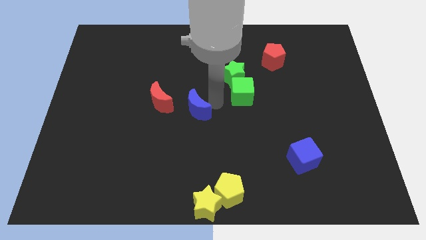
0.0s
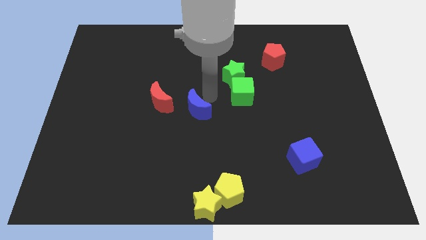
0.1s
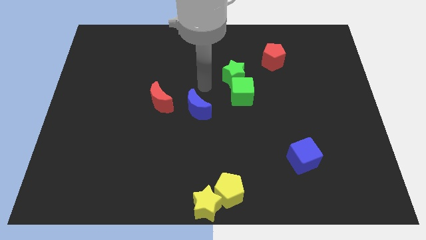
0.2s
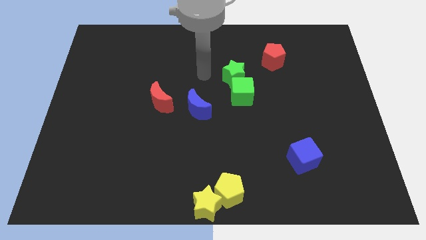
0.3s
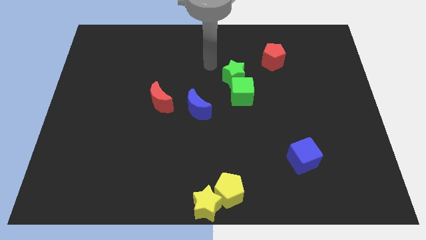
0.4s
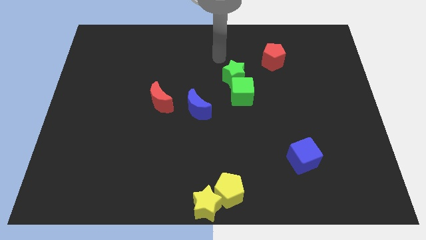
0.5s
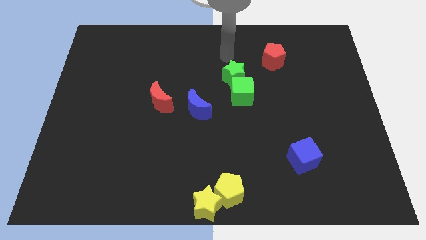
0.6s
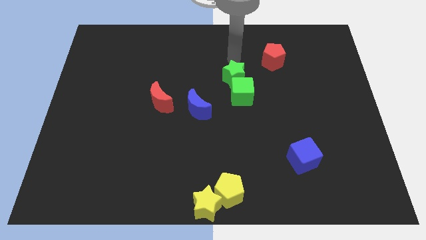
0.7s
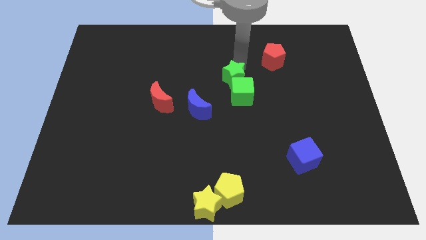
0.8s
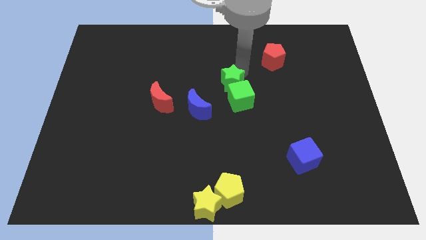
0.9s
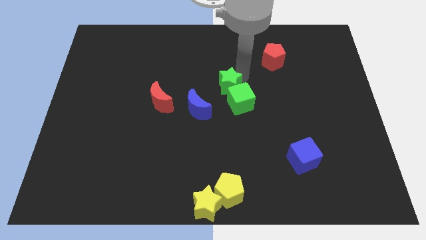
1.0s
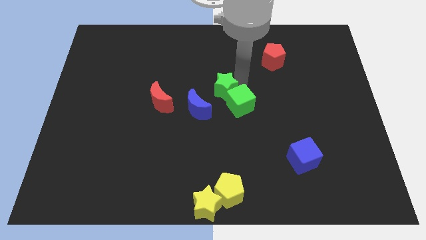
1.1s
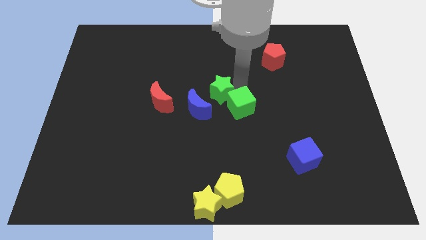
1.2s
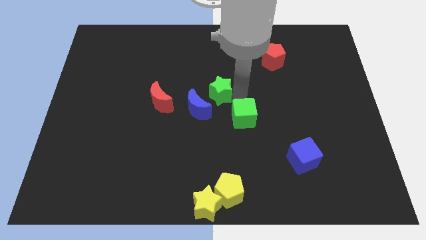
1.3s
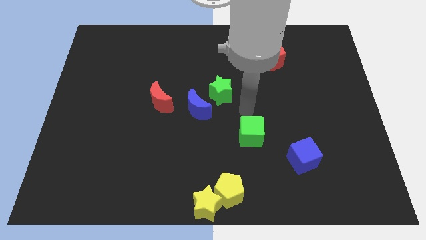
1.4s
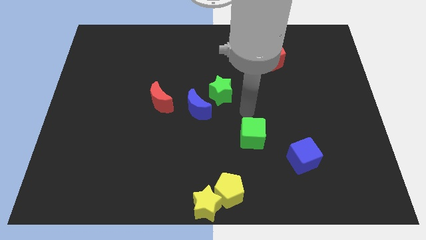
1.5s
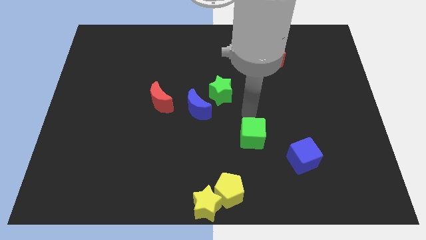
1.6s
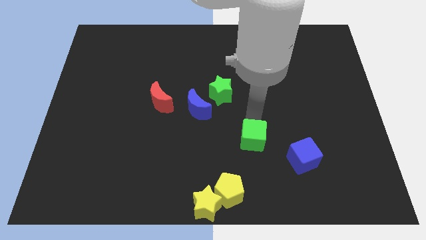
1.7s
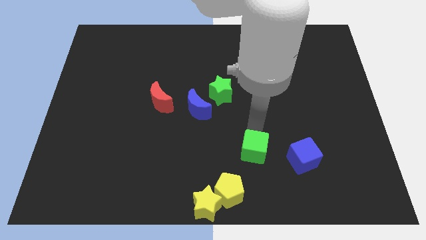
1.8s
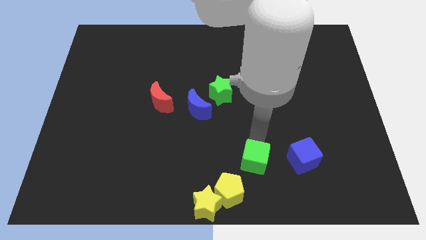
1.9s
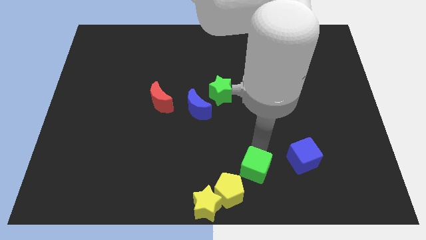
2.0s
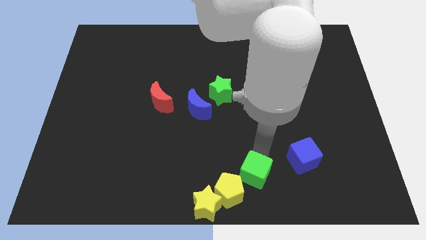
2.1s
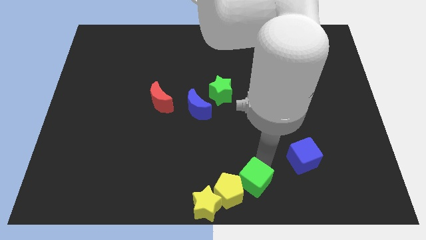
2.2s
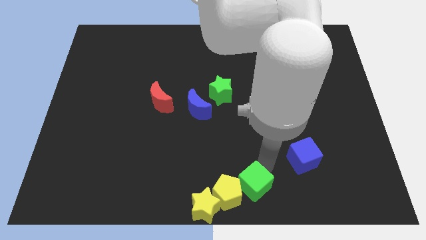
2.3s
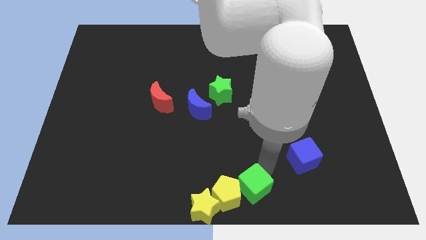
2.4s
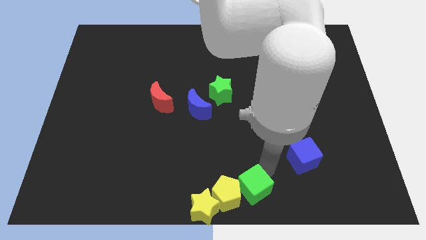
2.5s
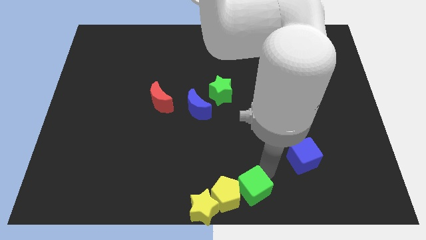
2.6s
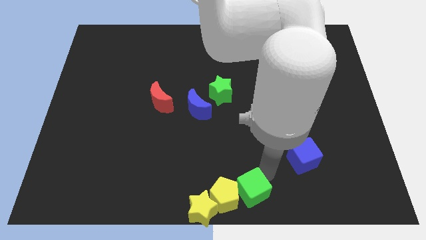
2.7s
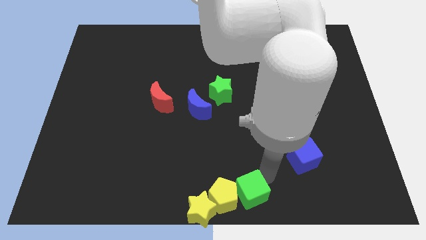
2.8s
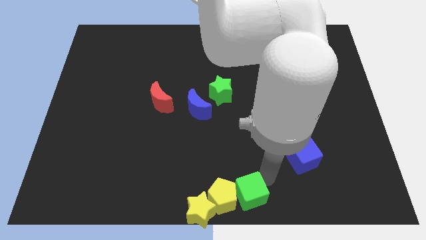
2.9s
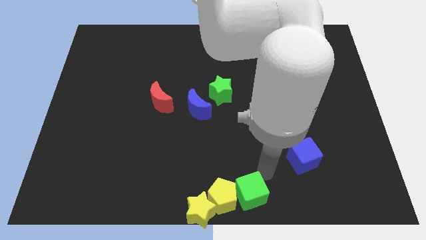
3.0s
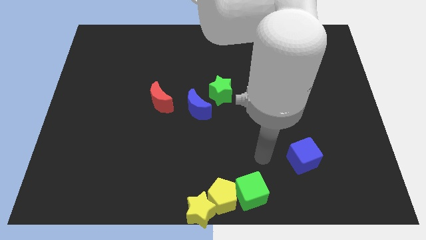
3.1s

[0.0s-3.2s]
place the green cube into the yellow pentagon

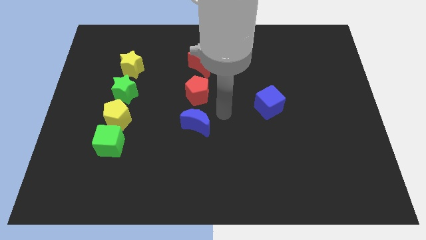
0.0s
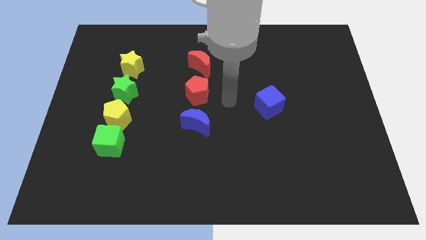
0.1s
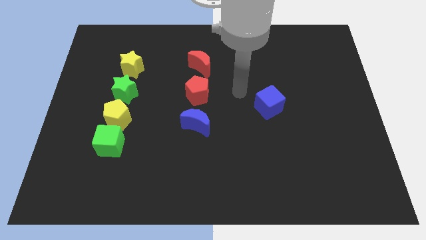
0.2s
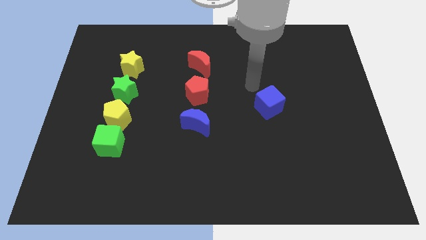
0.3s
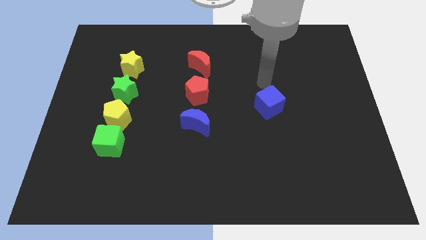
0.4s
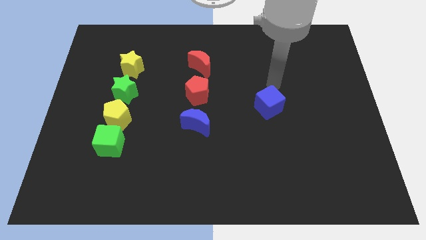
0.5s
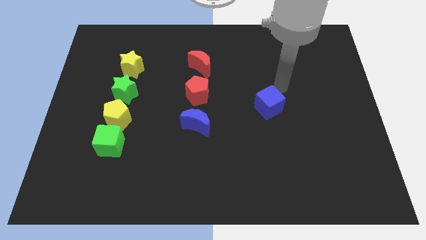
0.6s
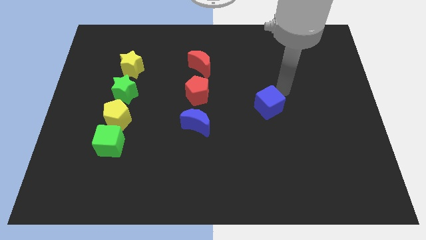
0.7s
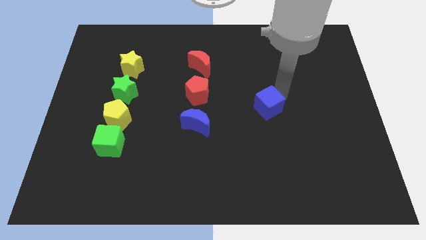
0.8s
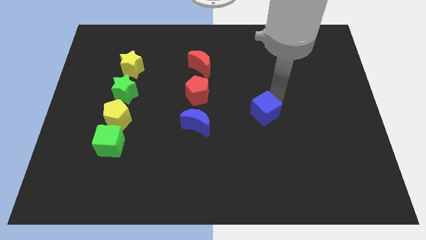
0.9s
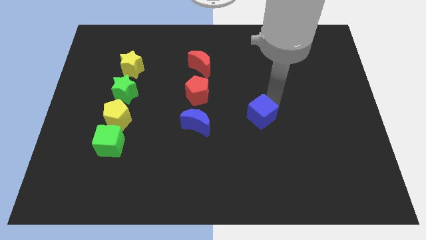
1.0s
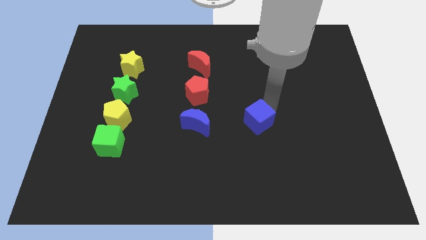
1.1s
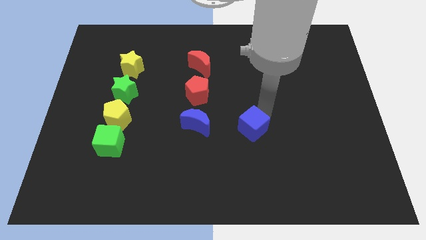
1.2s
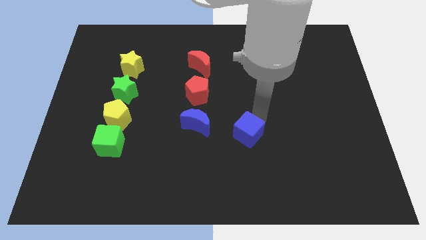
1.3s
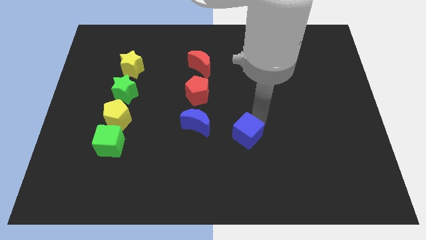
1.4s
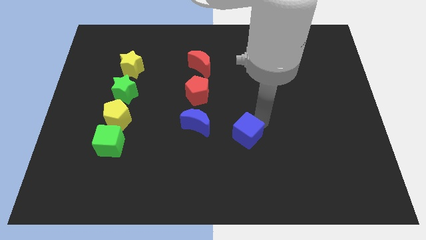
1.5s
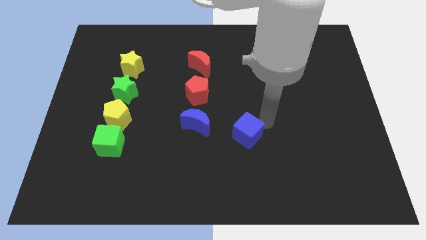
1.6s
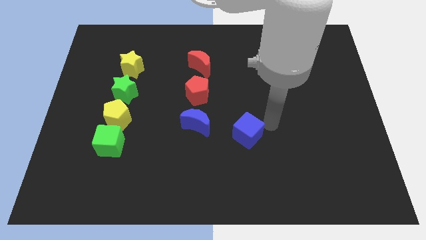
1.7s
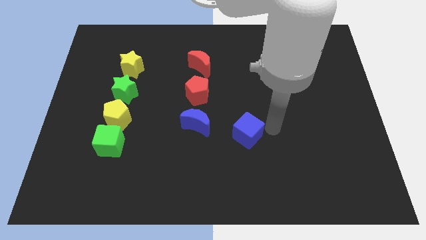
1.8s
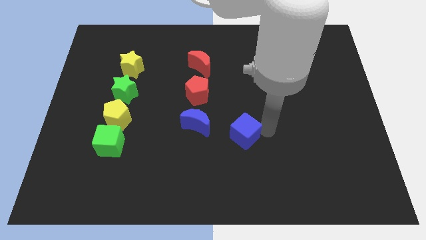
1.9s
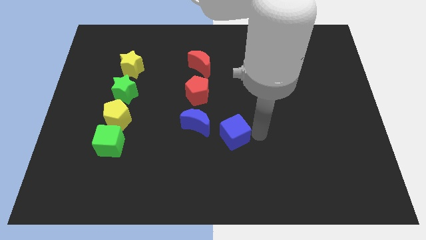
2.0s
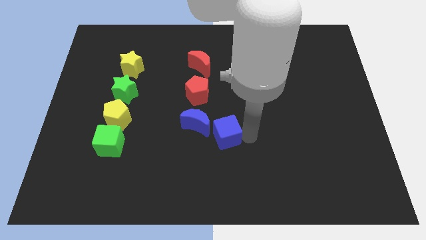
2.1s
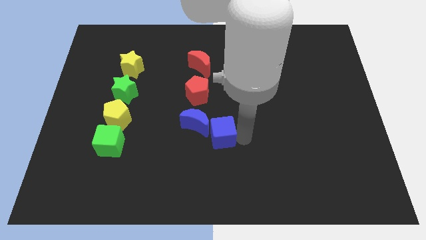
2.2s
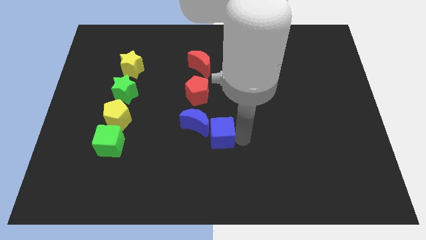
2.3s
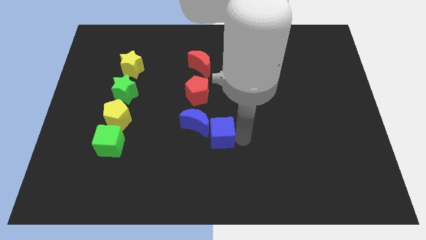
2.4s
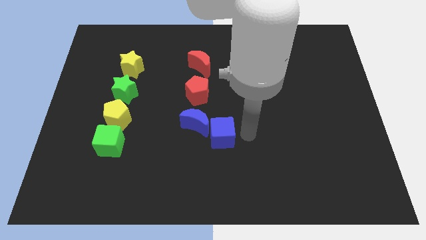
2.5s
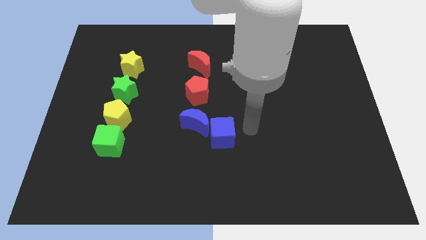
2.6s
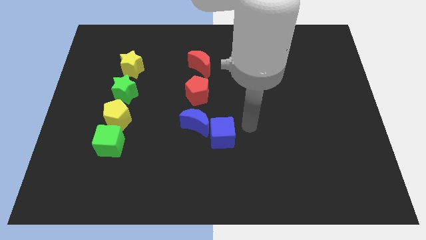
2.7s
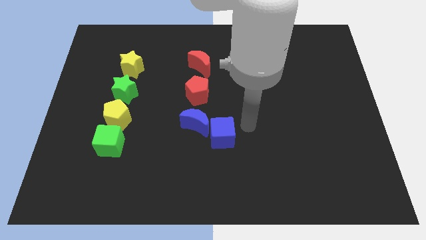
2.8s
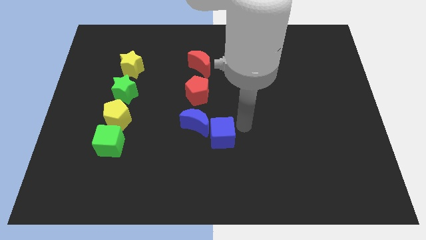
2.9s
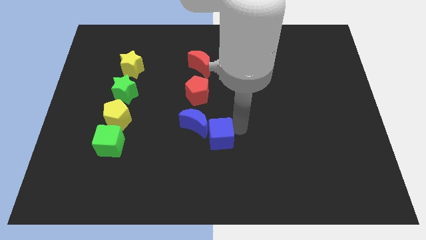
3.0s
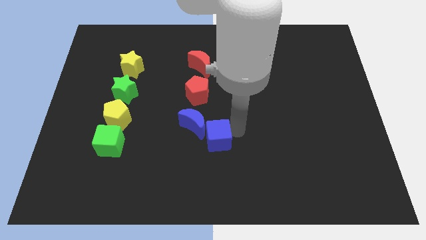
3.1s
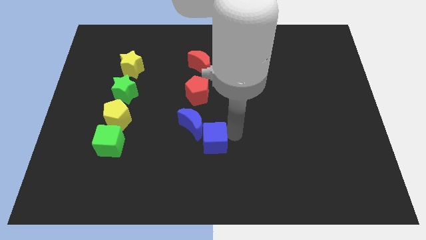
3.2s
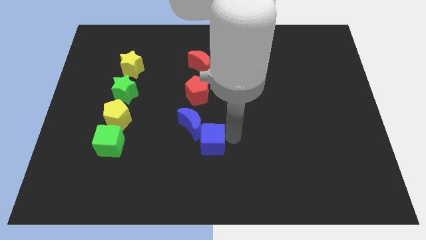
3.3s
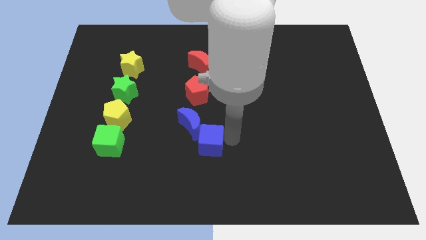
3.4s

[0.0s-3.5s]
move the blue cube into the blue moon

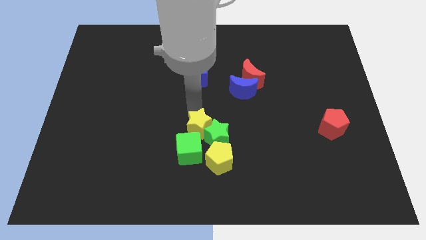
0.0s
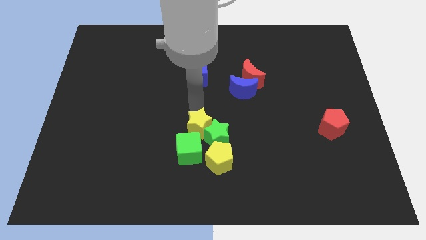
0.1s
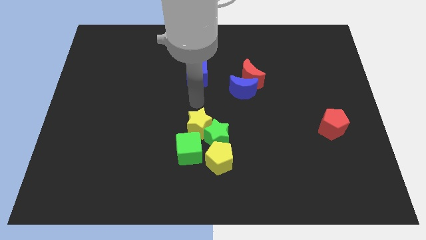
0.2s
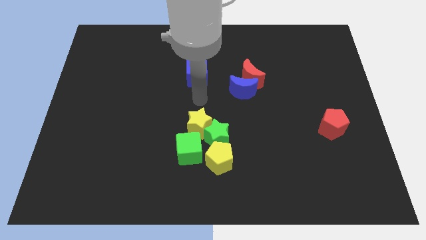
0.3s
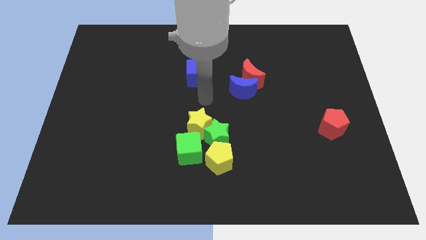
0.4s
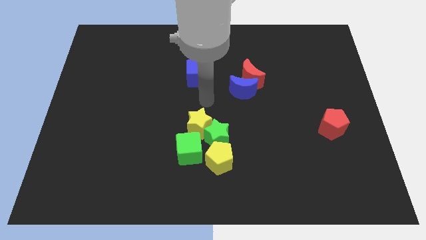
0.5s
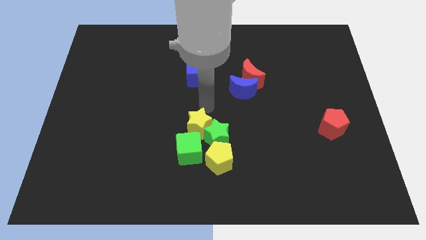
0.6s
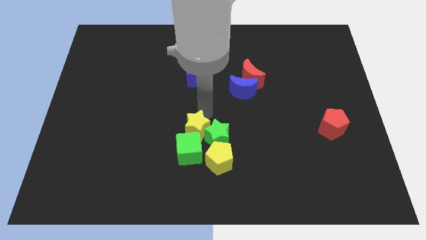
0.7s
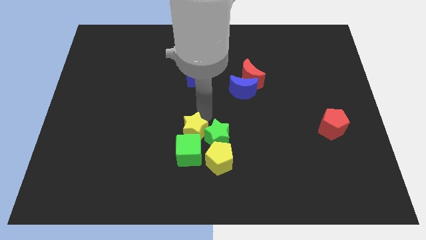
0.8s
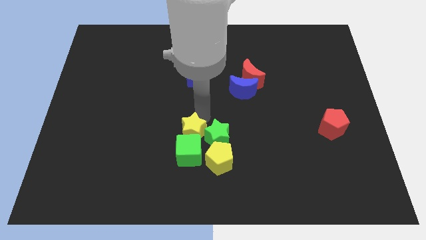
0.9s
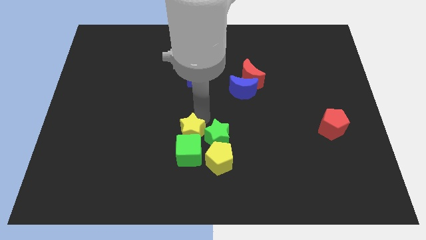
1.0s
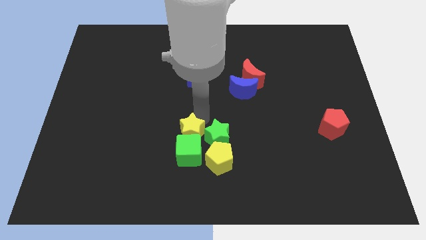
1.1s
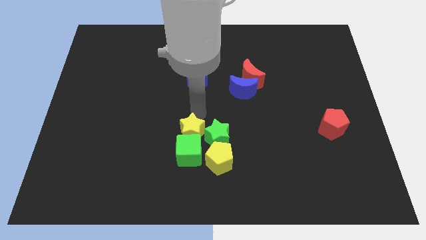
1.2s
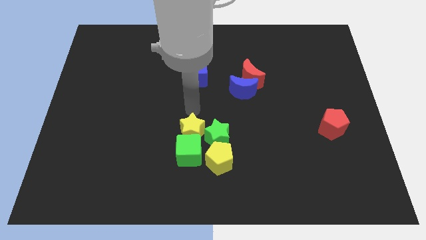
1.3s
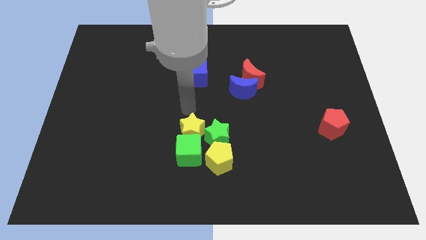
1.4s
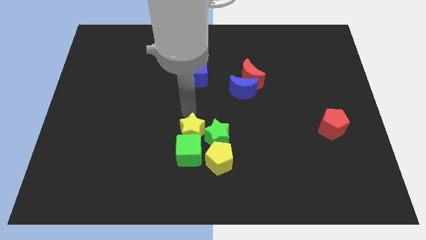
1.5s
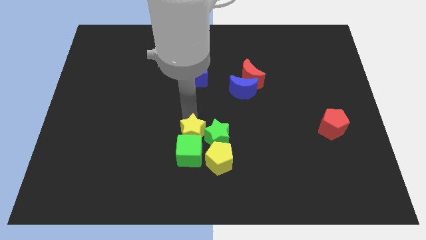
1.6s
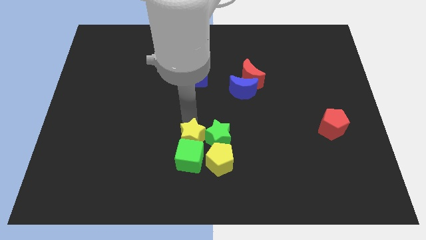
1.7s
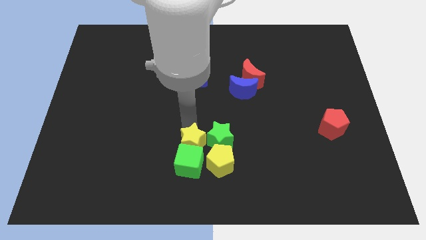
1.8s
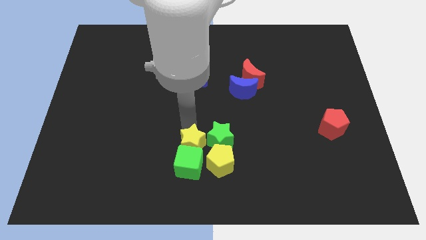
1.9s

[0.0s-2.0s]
adjust the yellow star into the green cube from the top

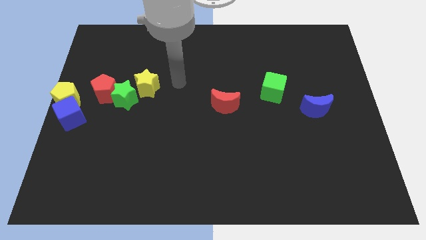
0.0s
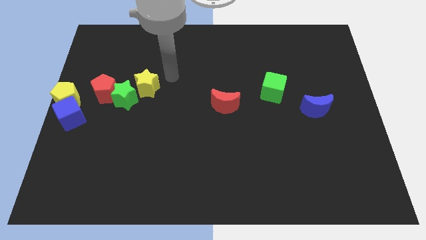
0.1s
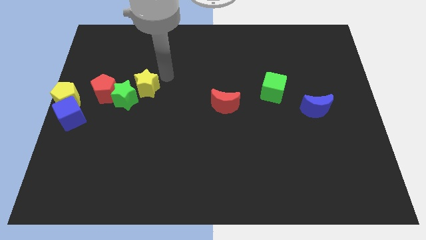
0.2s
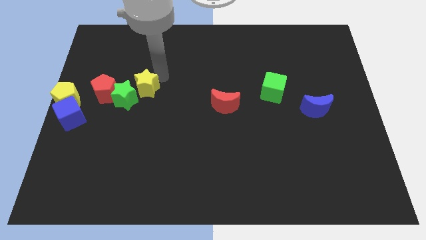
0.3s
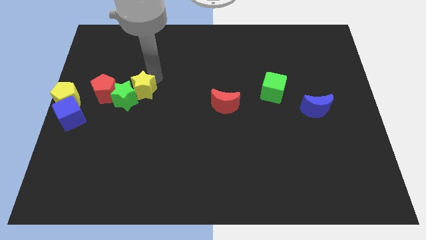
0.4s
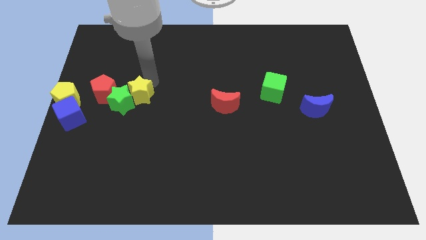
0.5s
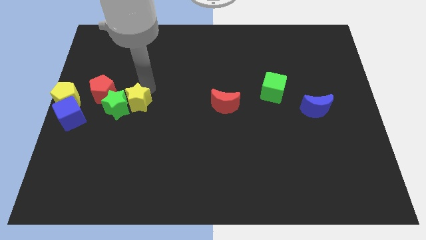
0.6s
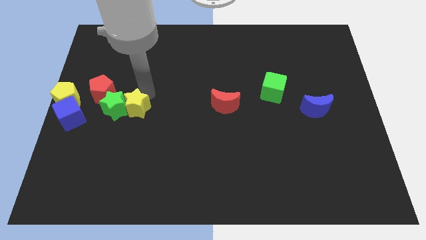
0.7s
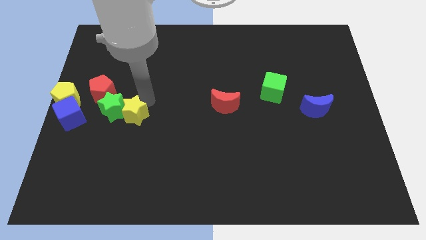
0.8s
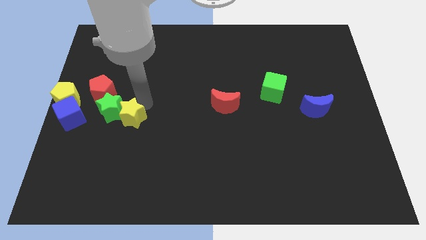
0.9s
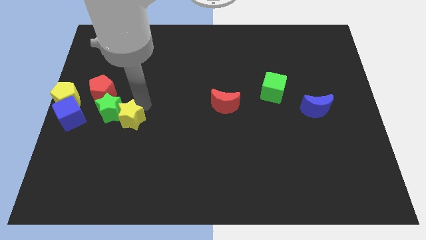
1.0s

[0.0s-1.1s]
push the yellow star into the green star
